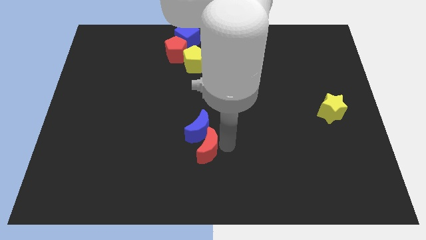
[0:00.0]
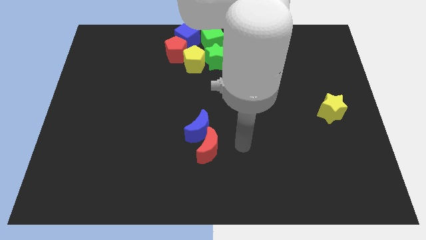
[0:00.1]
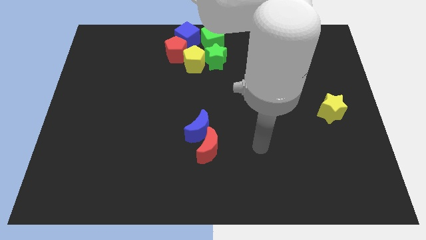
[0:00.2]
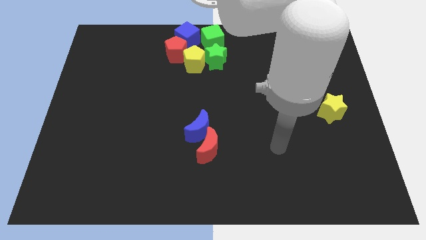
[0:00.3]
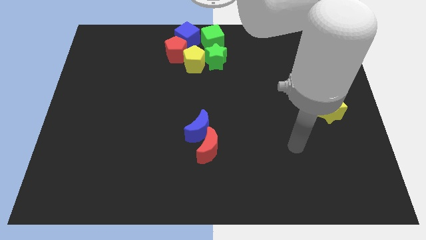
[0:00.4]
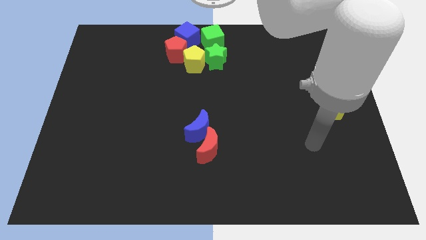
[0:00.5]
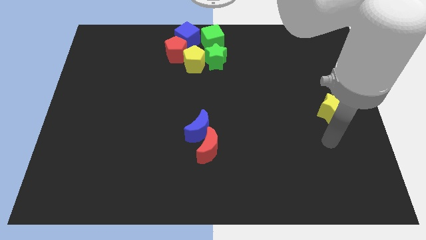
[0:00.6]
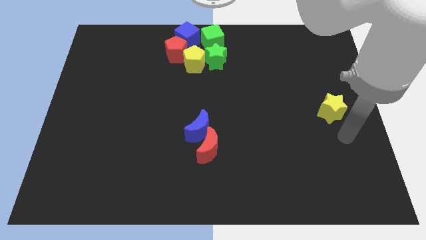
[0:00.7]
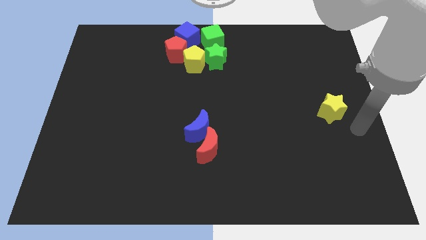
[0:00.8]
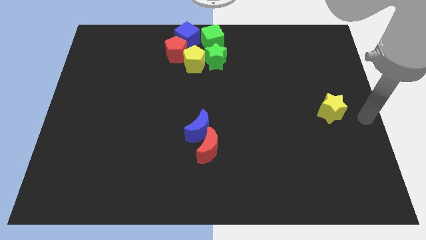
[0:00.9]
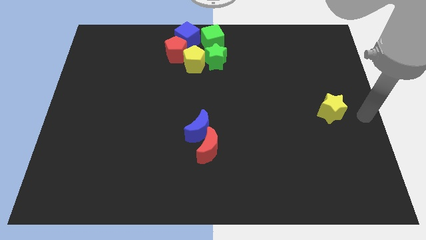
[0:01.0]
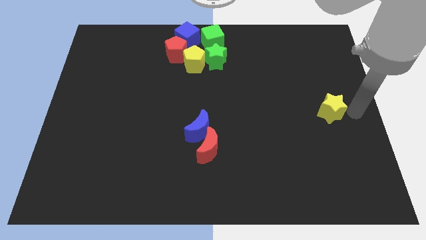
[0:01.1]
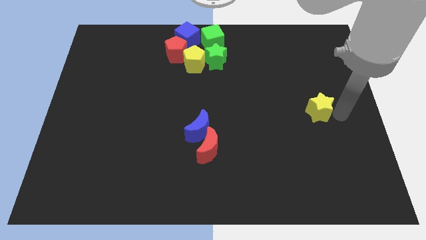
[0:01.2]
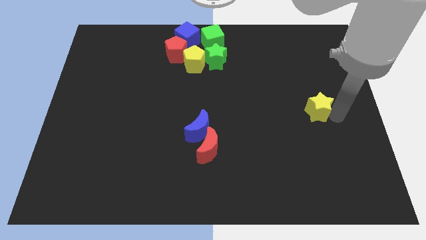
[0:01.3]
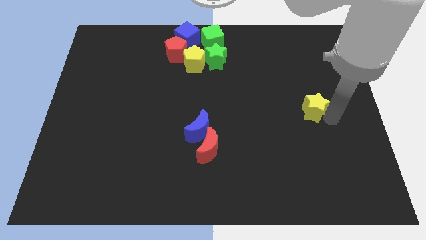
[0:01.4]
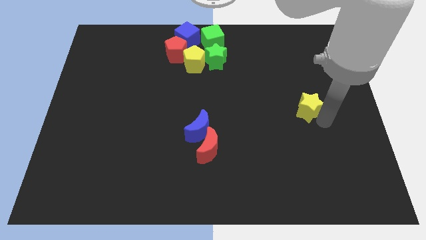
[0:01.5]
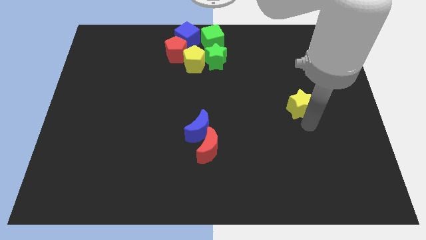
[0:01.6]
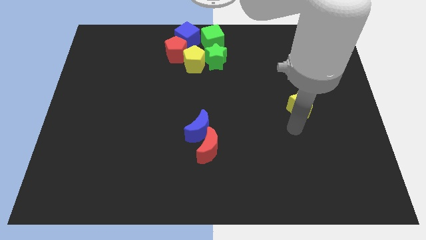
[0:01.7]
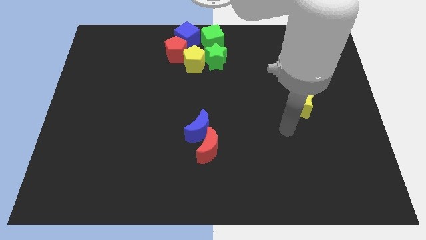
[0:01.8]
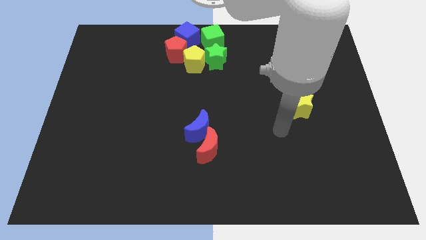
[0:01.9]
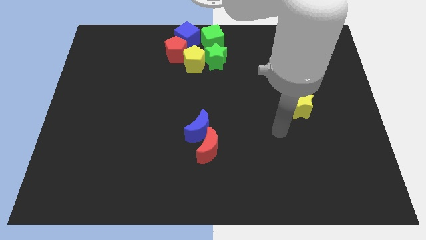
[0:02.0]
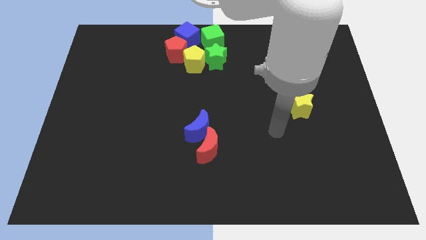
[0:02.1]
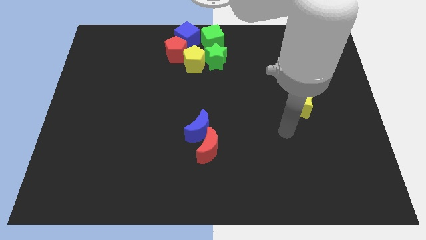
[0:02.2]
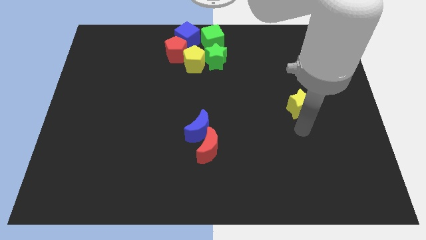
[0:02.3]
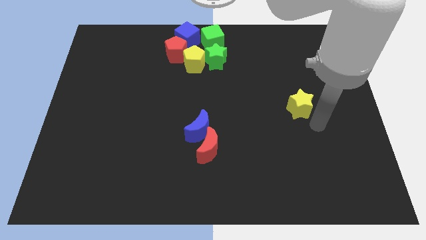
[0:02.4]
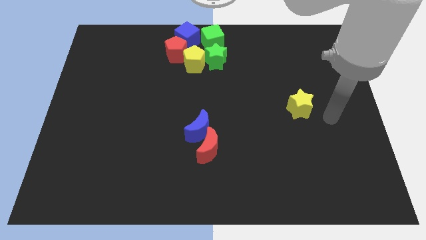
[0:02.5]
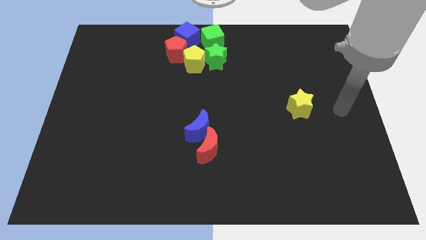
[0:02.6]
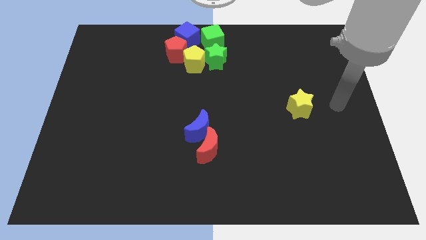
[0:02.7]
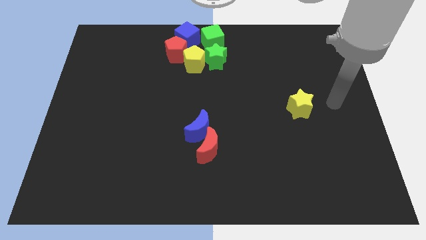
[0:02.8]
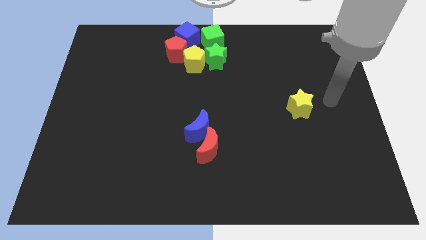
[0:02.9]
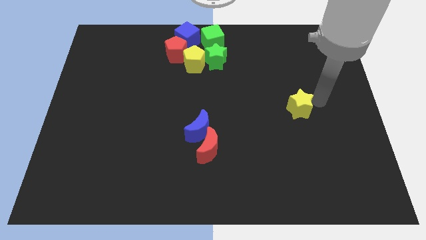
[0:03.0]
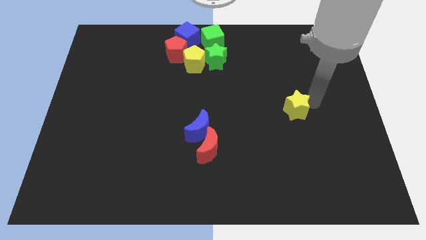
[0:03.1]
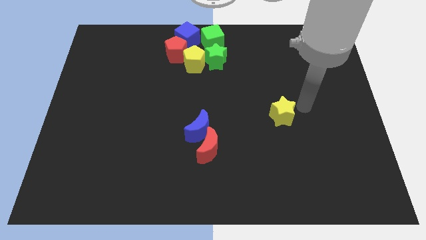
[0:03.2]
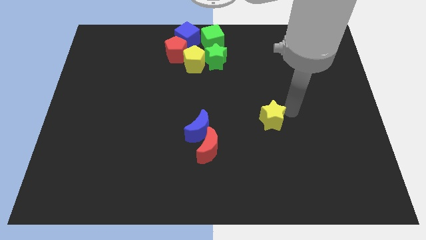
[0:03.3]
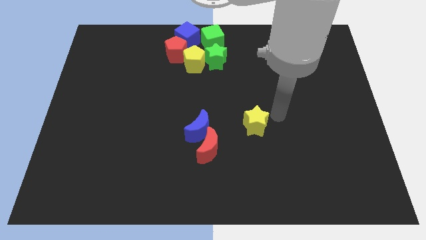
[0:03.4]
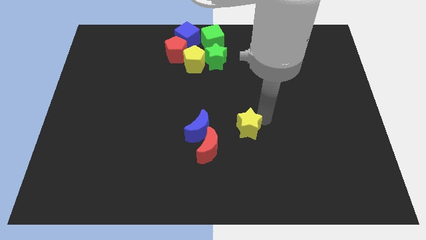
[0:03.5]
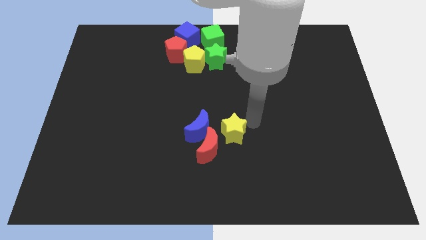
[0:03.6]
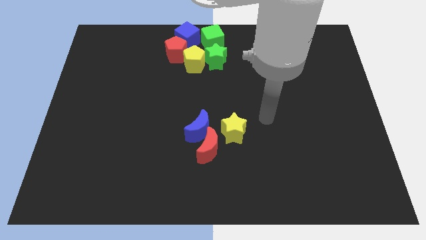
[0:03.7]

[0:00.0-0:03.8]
move the yellow star top right to the red crescent

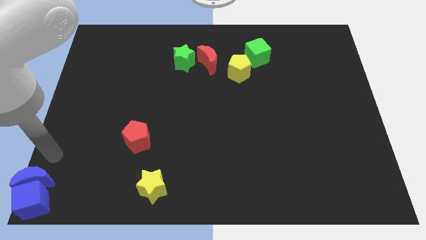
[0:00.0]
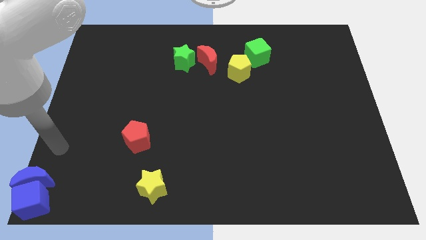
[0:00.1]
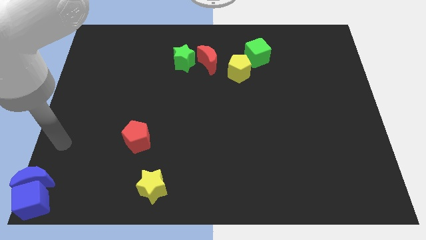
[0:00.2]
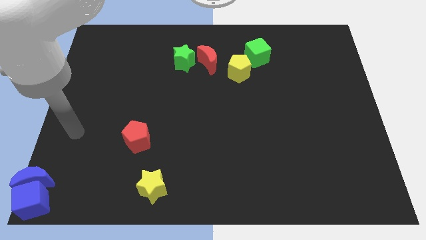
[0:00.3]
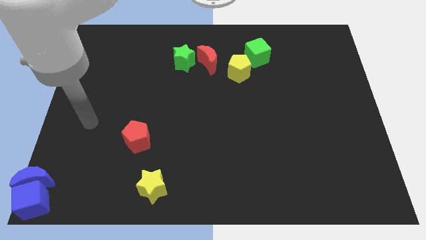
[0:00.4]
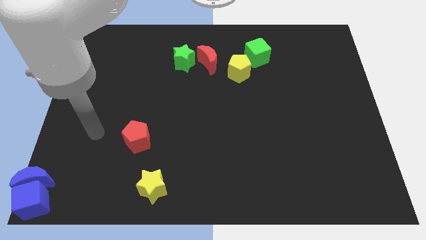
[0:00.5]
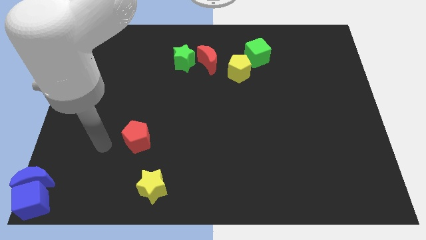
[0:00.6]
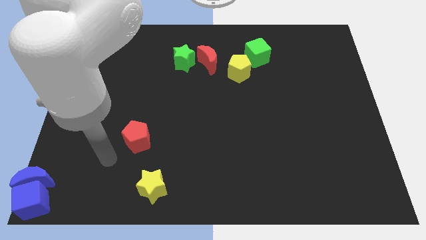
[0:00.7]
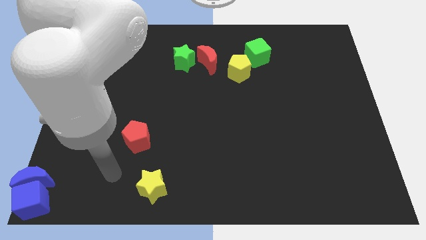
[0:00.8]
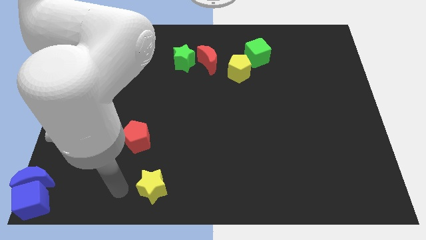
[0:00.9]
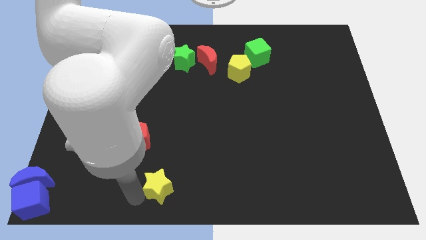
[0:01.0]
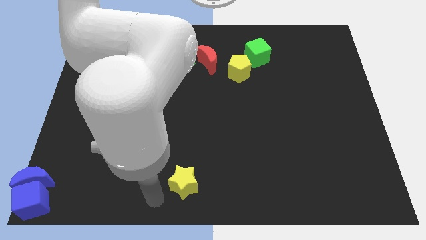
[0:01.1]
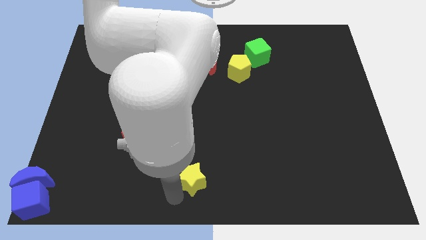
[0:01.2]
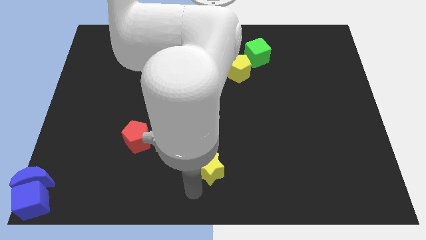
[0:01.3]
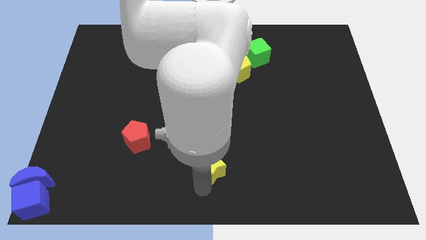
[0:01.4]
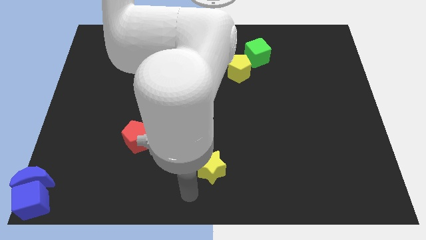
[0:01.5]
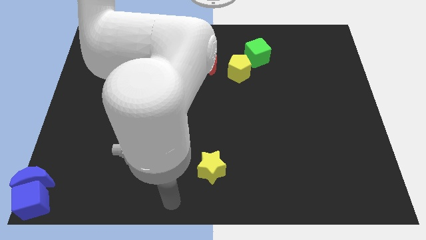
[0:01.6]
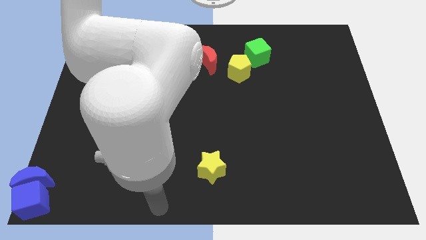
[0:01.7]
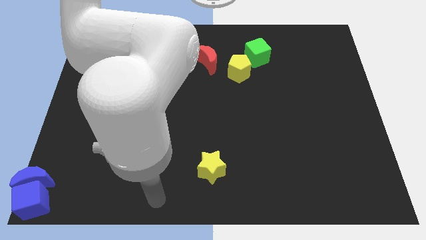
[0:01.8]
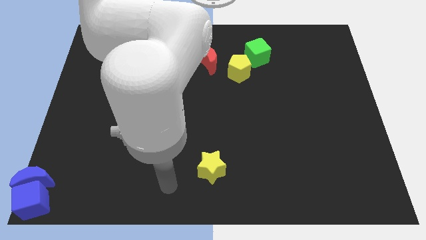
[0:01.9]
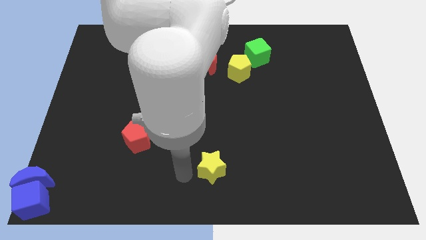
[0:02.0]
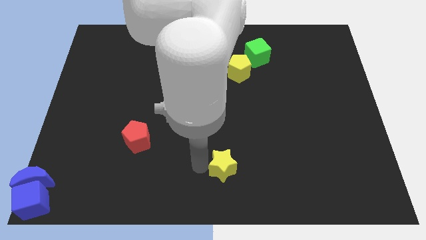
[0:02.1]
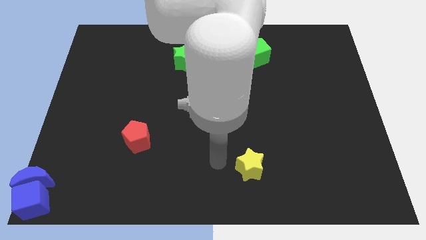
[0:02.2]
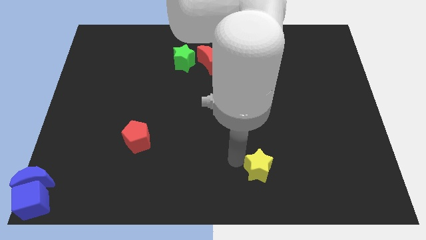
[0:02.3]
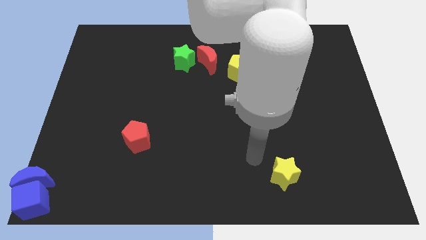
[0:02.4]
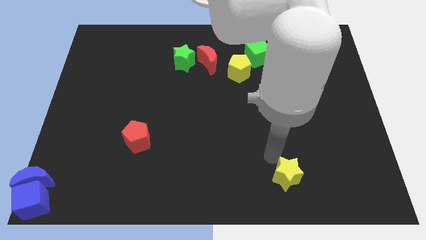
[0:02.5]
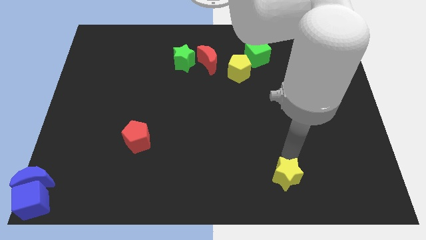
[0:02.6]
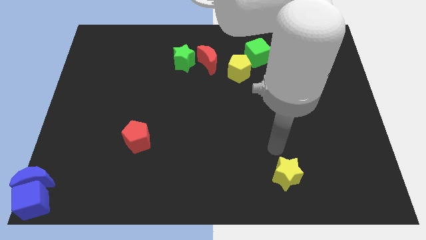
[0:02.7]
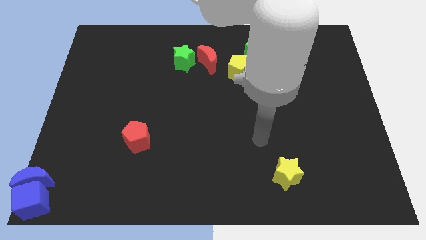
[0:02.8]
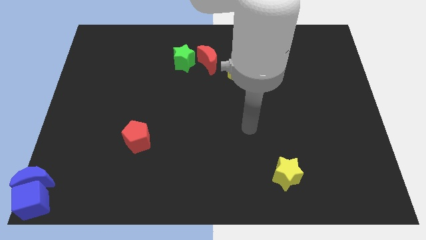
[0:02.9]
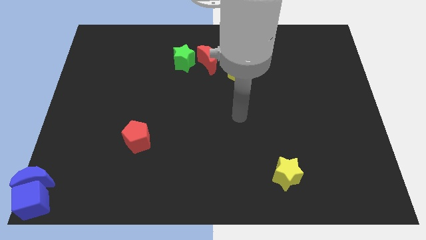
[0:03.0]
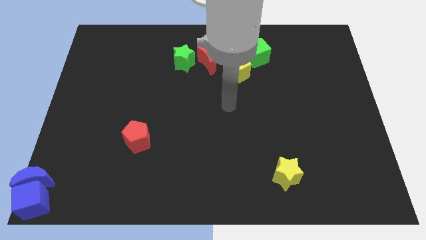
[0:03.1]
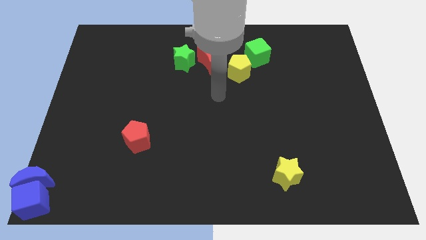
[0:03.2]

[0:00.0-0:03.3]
move the yellow star to the right side of the board

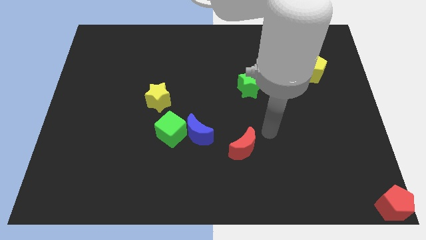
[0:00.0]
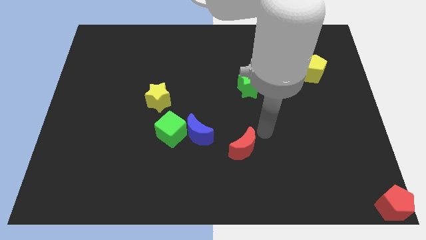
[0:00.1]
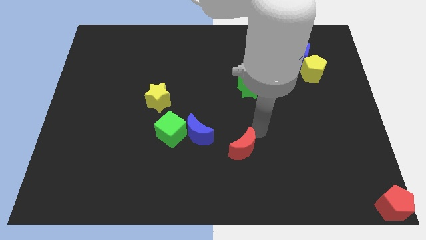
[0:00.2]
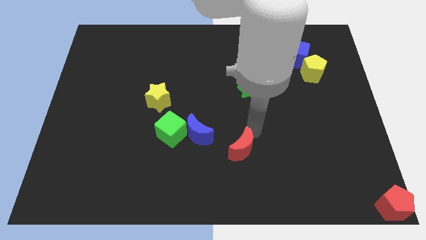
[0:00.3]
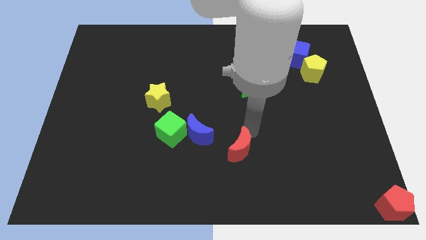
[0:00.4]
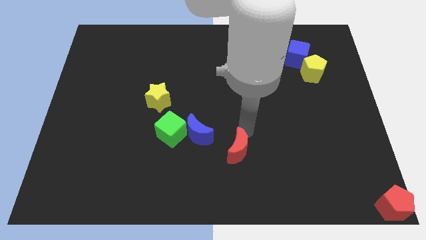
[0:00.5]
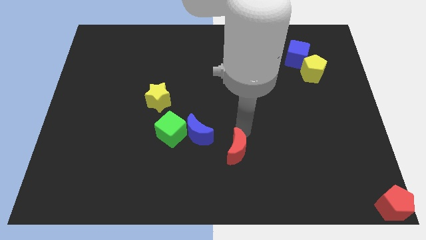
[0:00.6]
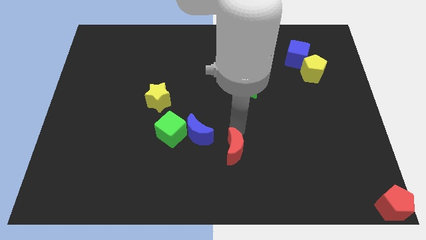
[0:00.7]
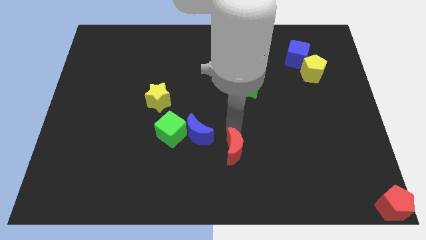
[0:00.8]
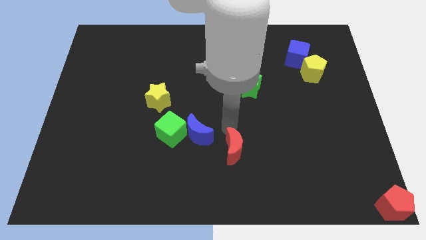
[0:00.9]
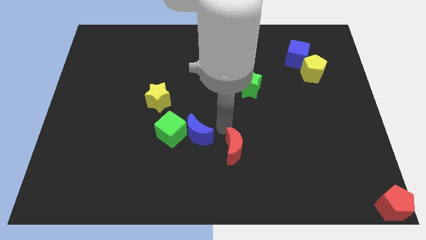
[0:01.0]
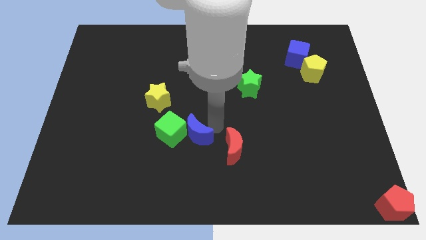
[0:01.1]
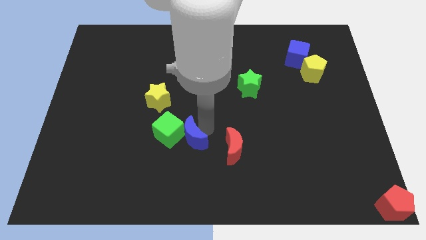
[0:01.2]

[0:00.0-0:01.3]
adjust the red moon slightly

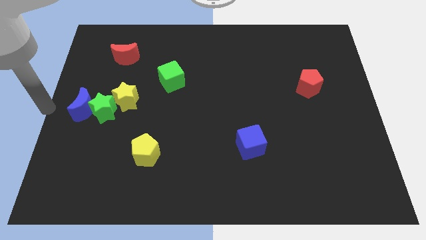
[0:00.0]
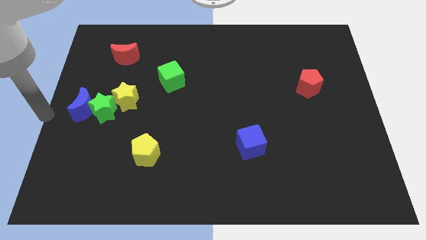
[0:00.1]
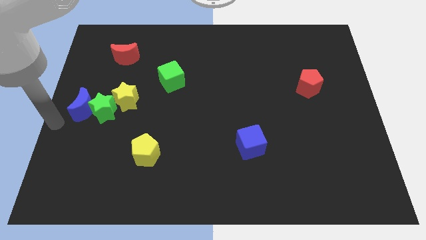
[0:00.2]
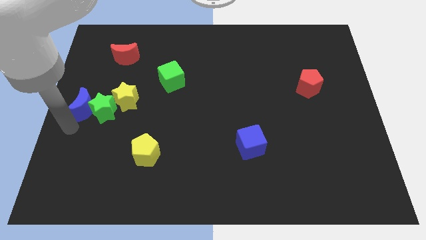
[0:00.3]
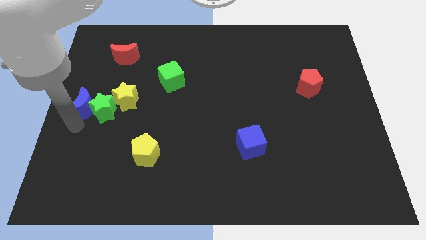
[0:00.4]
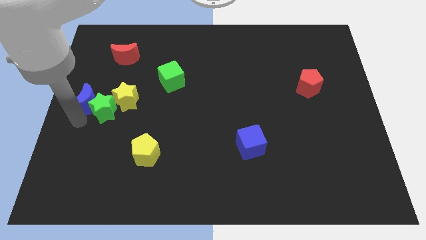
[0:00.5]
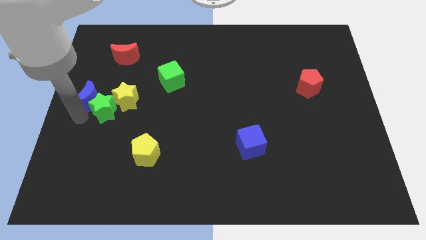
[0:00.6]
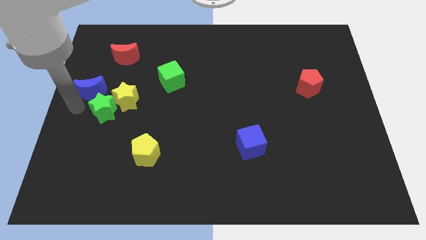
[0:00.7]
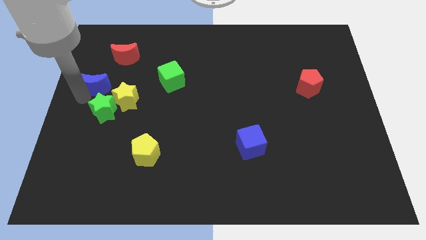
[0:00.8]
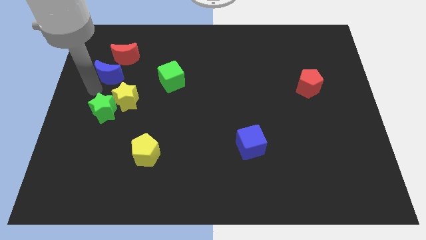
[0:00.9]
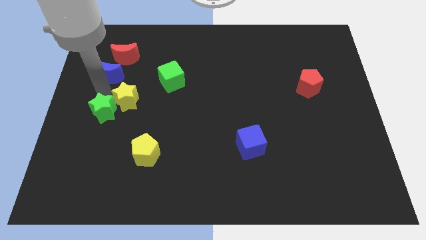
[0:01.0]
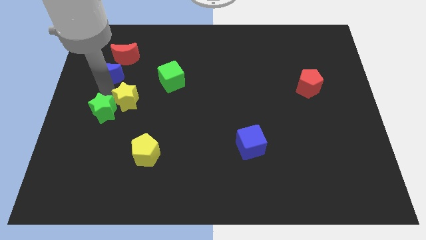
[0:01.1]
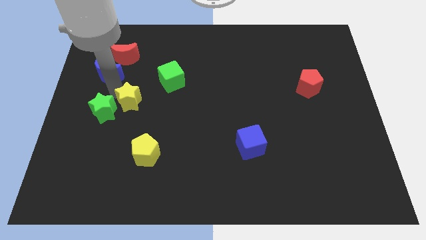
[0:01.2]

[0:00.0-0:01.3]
place blue moon to the bottom of the red crescent
